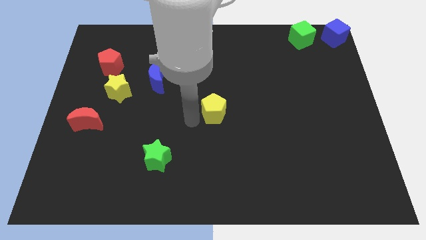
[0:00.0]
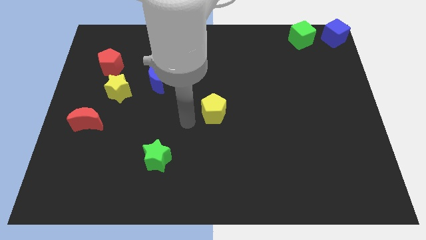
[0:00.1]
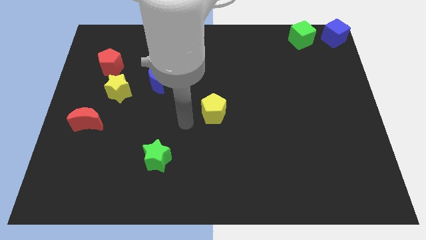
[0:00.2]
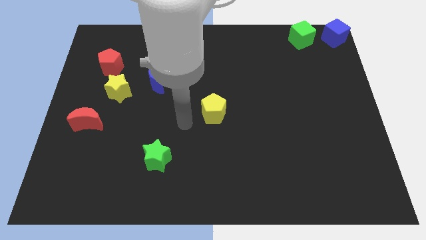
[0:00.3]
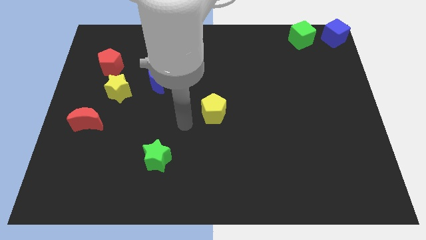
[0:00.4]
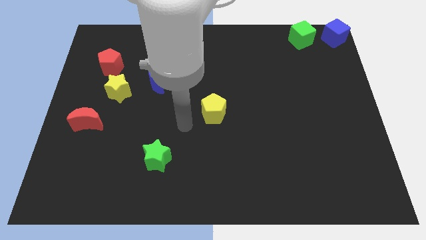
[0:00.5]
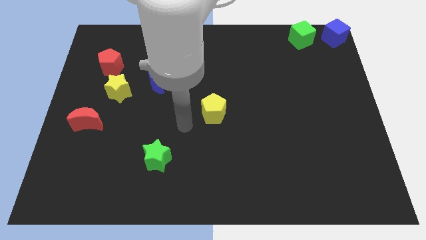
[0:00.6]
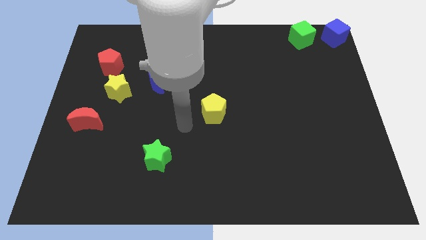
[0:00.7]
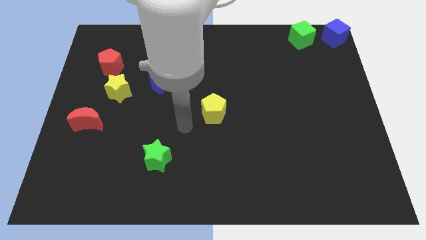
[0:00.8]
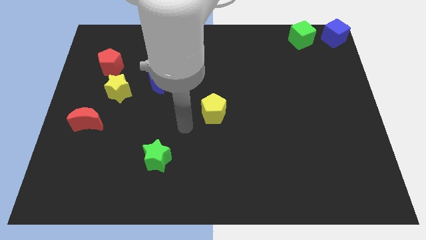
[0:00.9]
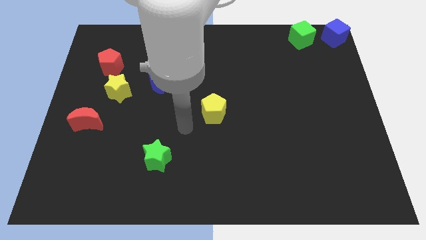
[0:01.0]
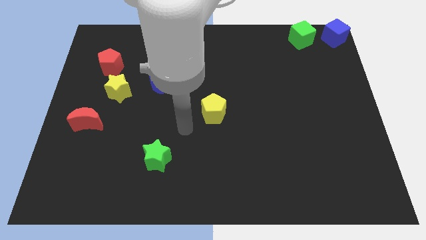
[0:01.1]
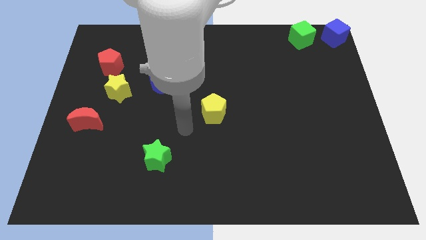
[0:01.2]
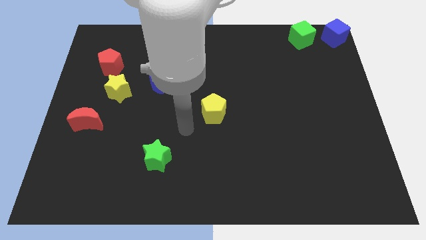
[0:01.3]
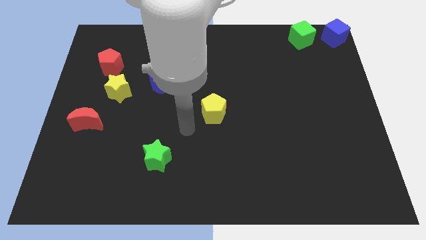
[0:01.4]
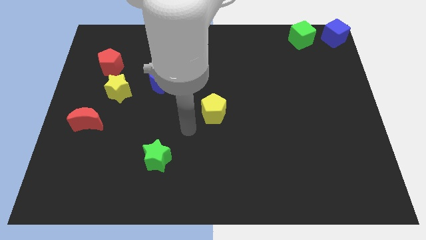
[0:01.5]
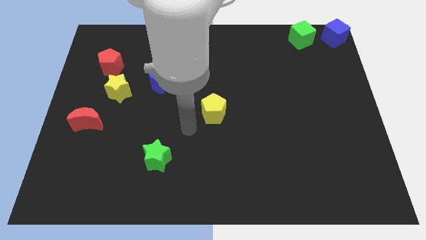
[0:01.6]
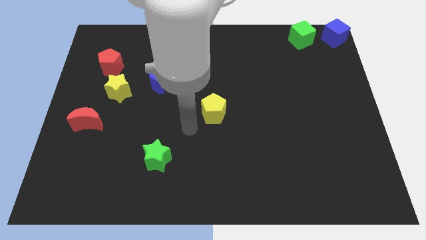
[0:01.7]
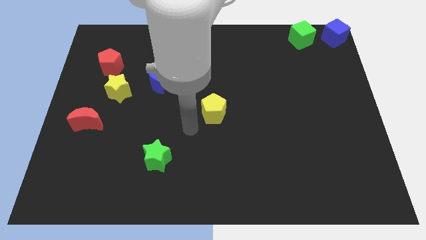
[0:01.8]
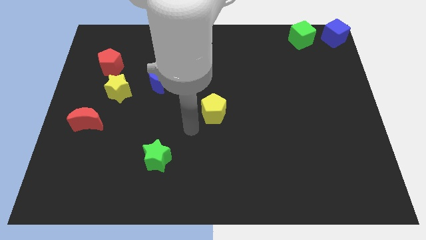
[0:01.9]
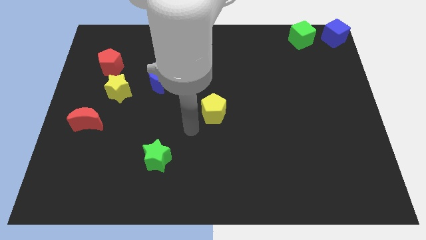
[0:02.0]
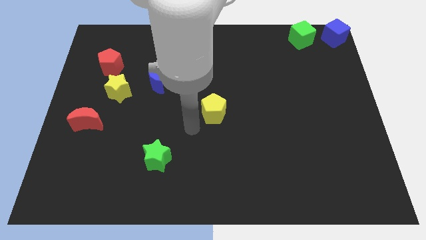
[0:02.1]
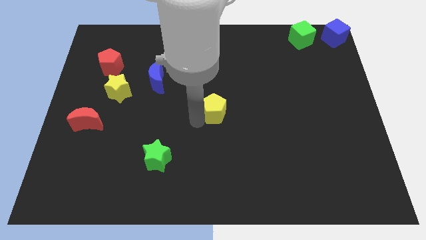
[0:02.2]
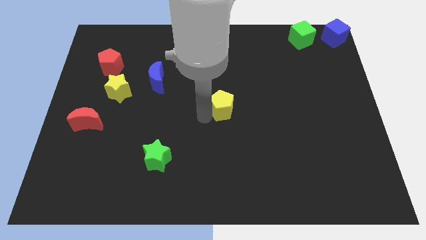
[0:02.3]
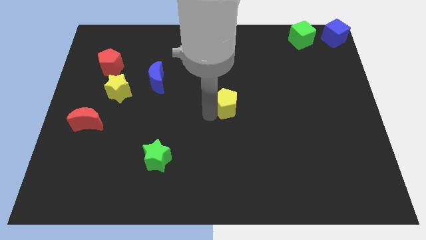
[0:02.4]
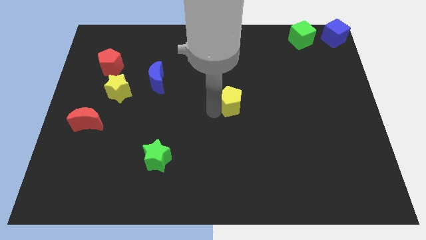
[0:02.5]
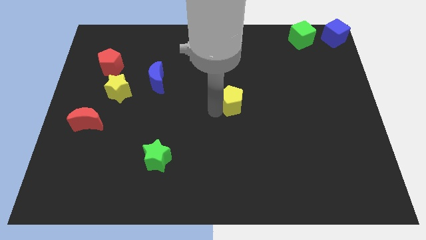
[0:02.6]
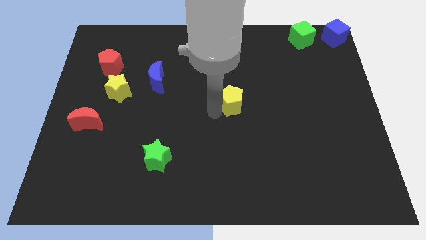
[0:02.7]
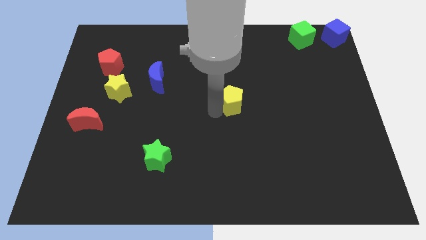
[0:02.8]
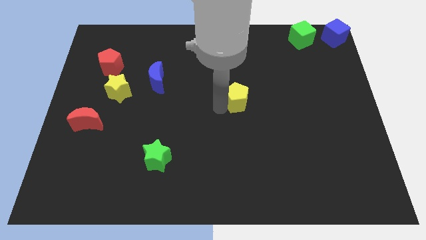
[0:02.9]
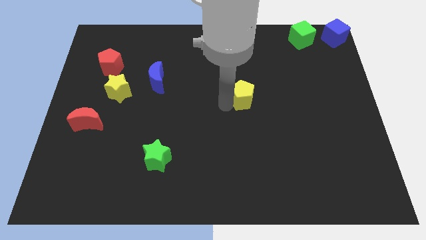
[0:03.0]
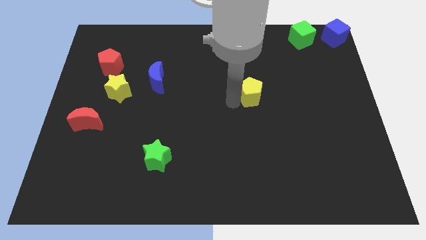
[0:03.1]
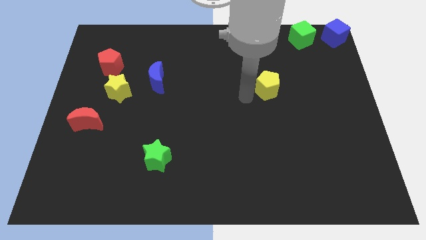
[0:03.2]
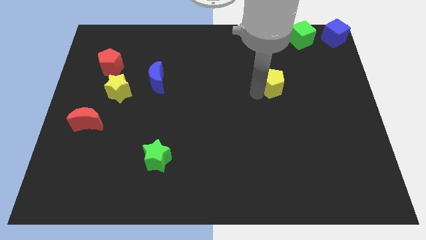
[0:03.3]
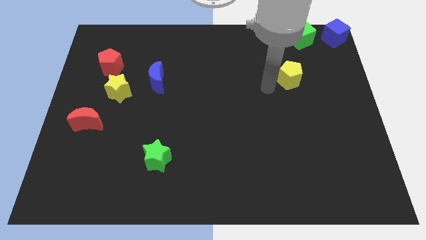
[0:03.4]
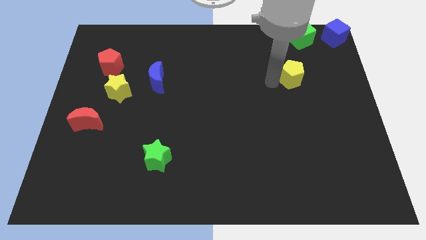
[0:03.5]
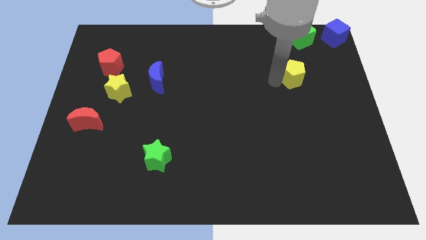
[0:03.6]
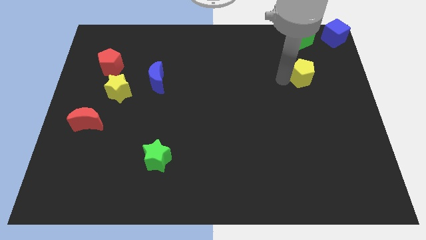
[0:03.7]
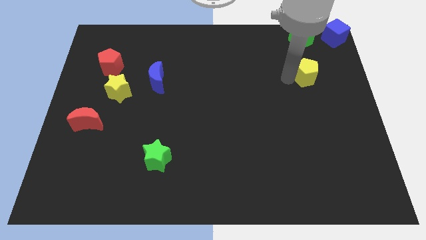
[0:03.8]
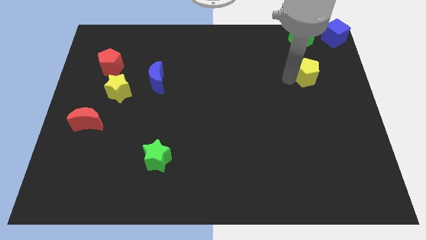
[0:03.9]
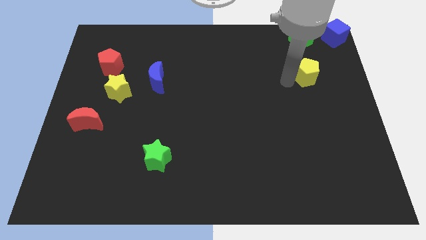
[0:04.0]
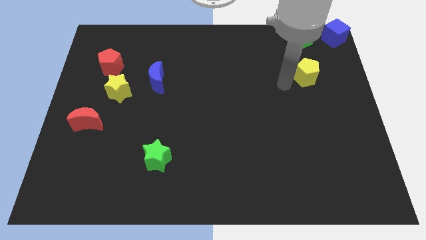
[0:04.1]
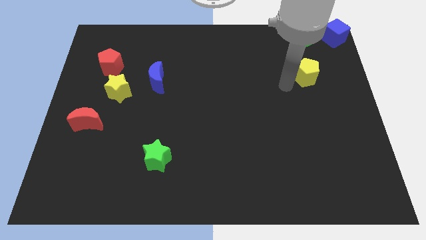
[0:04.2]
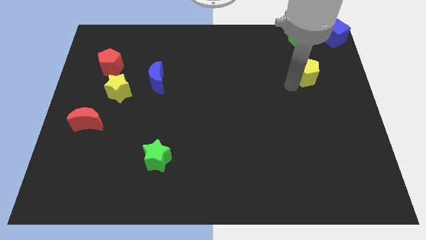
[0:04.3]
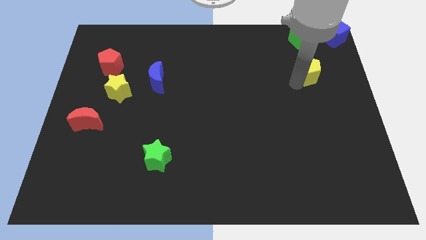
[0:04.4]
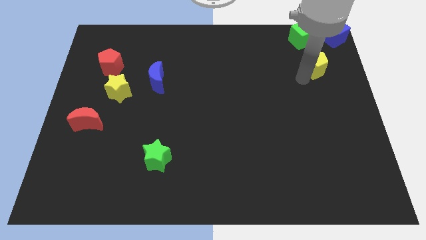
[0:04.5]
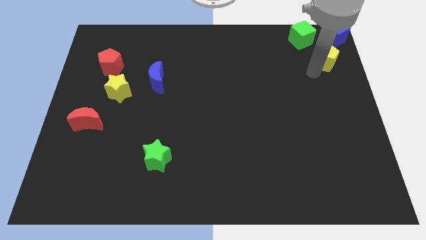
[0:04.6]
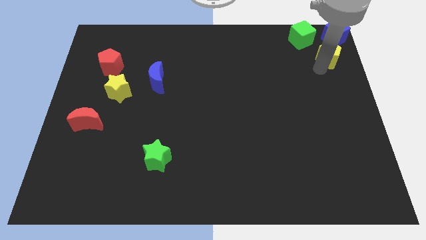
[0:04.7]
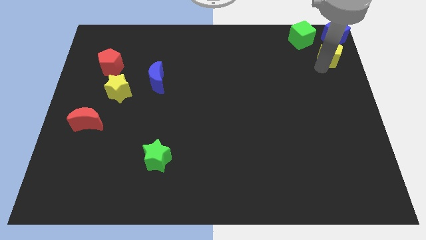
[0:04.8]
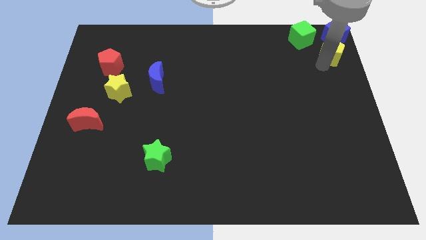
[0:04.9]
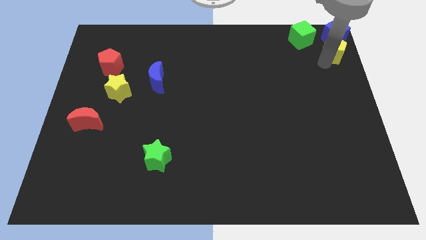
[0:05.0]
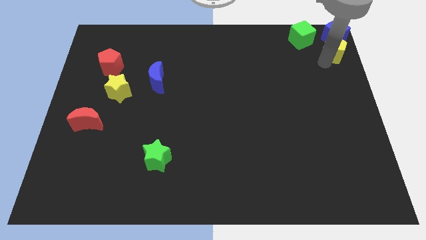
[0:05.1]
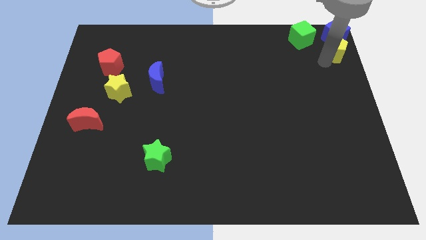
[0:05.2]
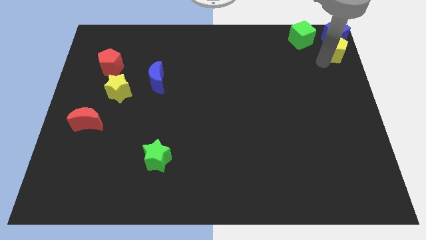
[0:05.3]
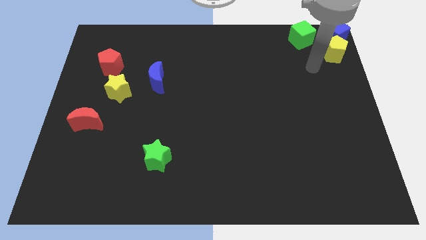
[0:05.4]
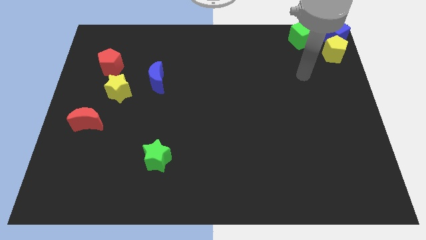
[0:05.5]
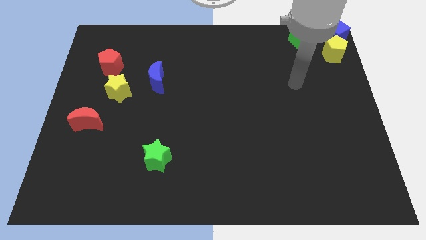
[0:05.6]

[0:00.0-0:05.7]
push the yellow pentagon at bottom of the blue cube

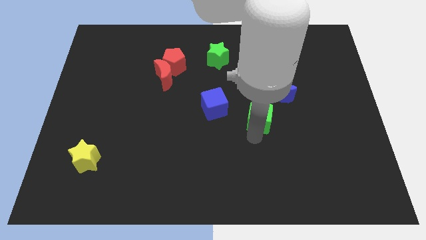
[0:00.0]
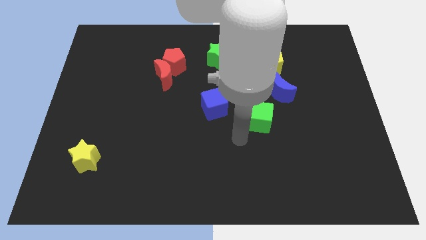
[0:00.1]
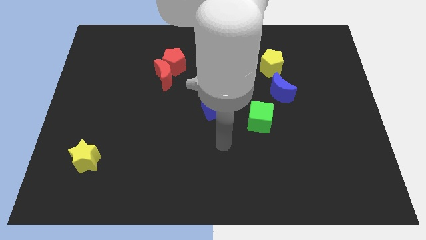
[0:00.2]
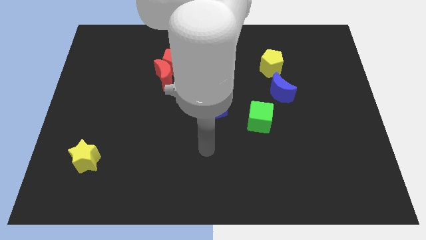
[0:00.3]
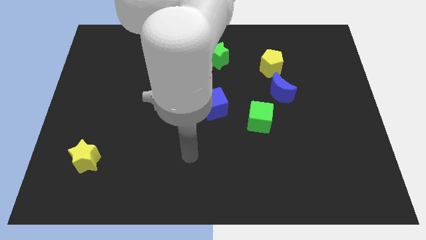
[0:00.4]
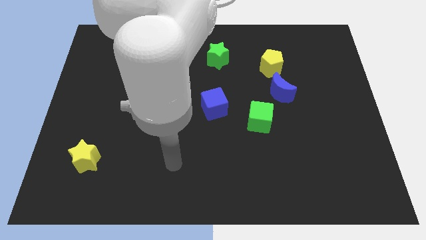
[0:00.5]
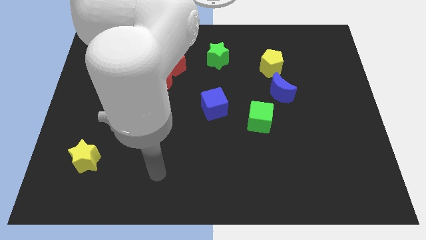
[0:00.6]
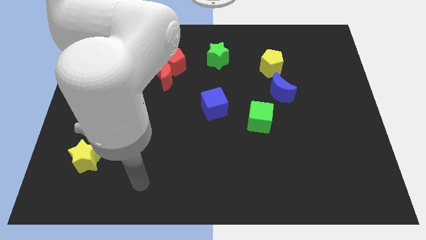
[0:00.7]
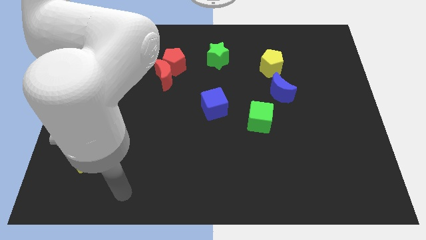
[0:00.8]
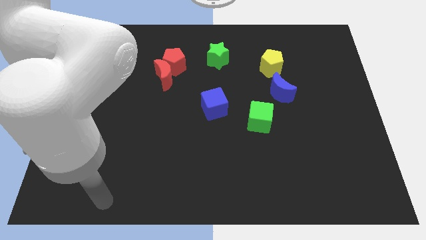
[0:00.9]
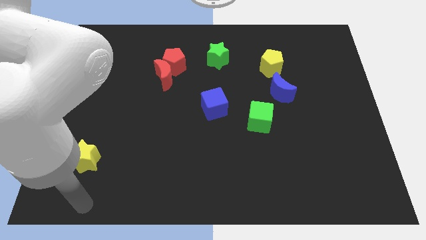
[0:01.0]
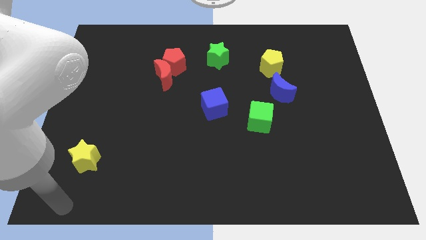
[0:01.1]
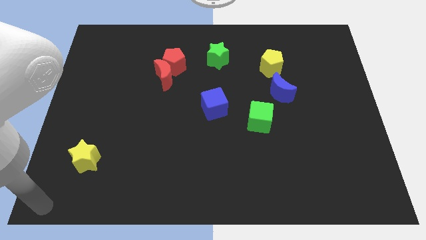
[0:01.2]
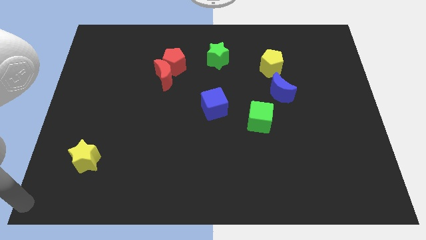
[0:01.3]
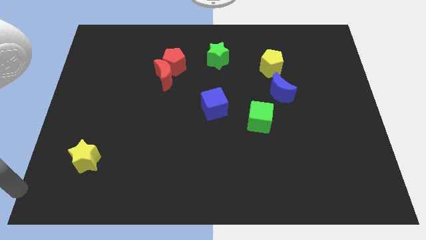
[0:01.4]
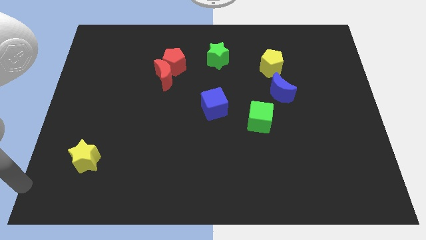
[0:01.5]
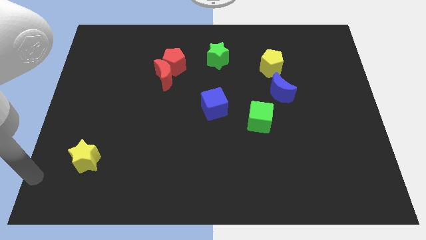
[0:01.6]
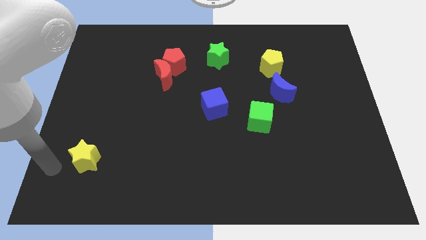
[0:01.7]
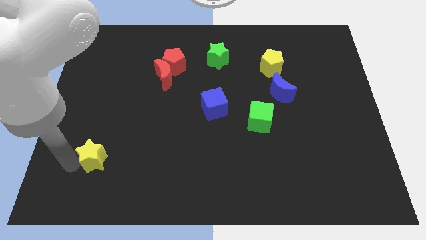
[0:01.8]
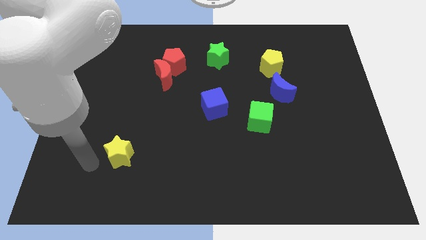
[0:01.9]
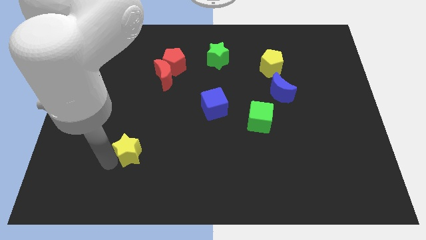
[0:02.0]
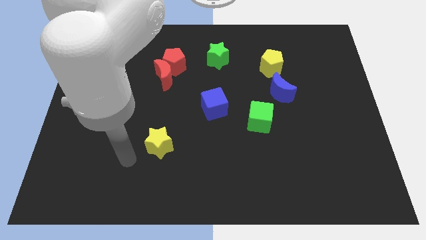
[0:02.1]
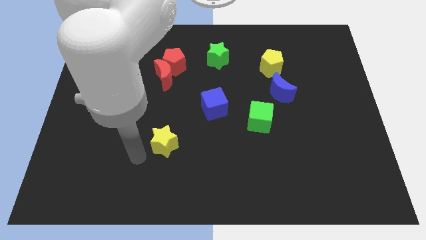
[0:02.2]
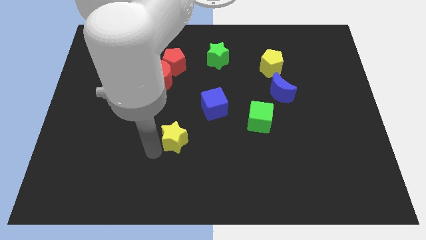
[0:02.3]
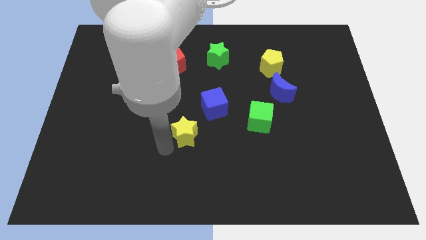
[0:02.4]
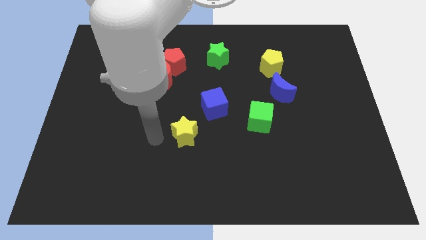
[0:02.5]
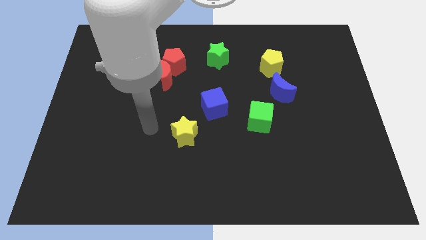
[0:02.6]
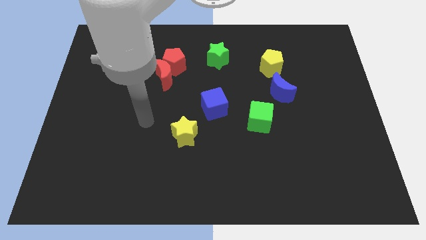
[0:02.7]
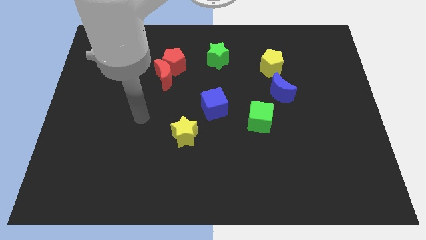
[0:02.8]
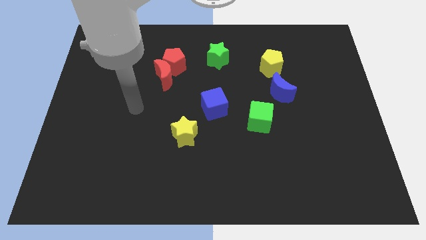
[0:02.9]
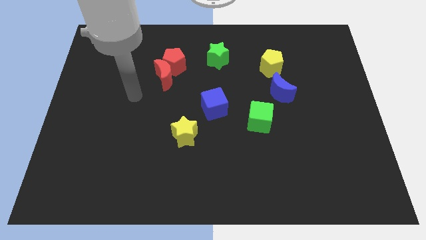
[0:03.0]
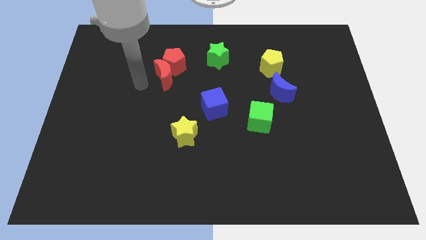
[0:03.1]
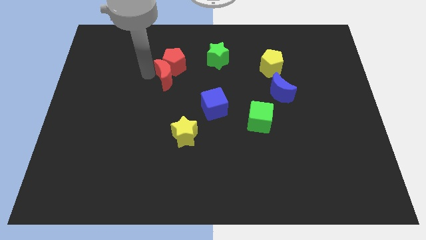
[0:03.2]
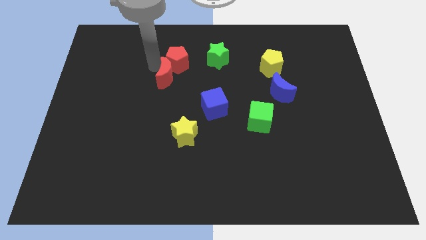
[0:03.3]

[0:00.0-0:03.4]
push the yellow star diagonal to the blue cube
